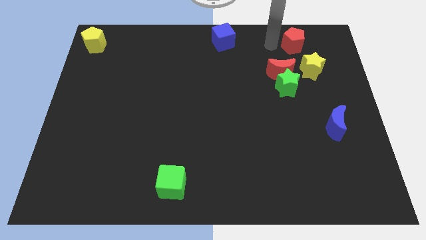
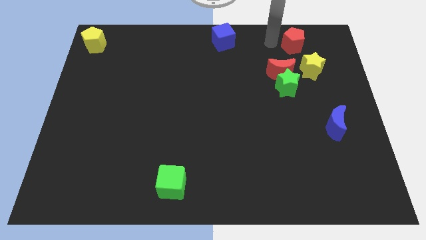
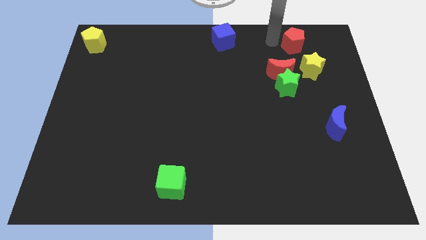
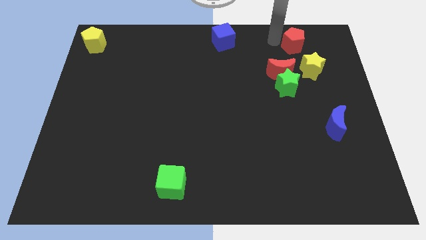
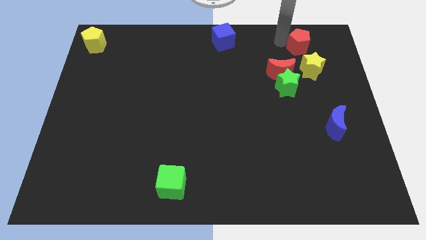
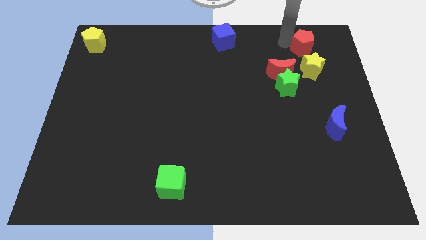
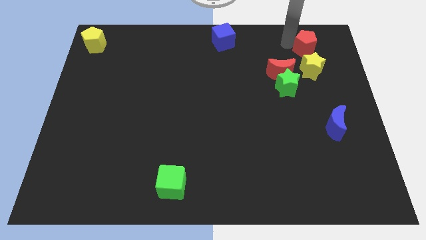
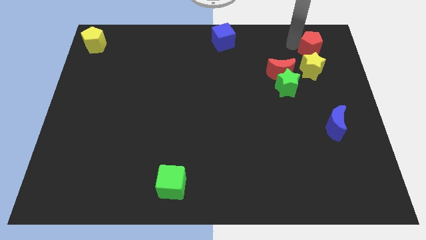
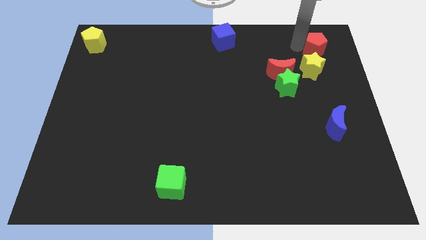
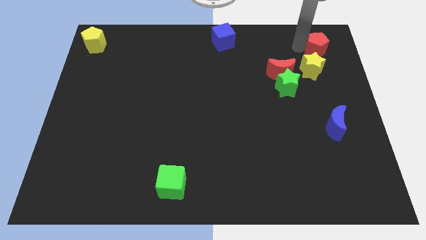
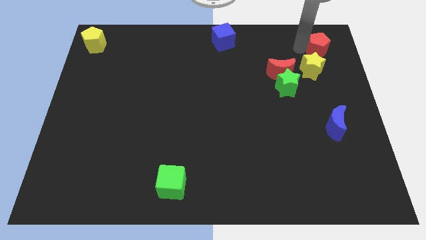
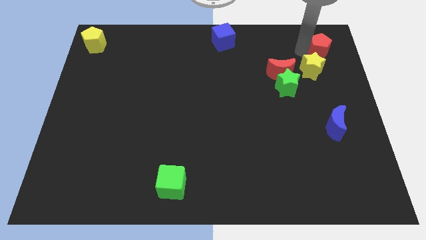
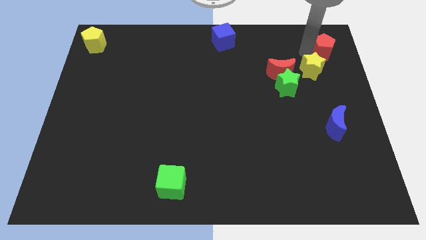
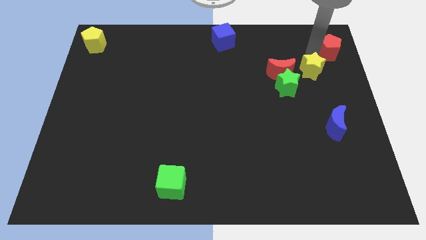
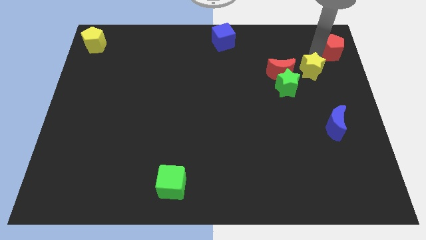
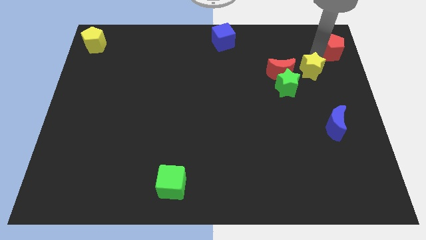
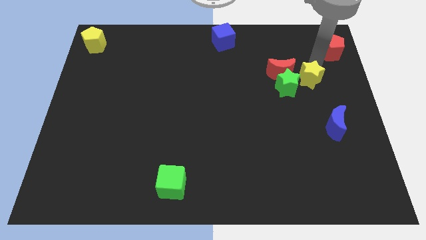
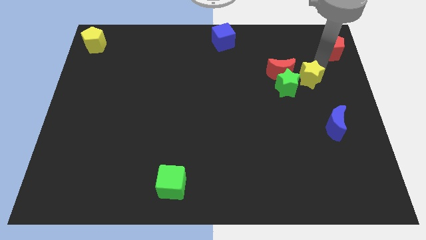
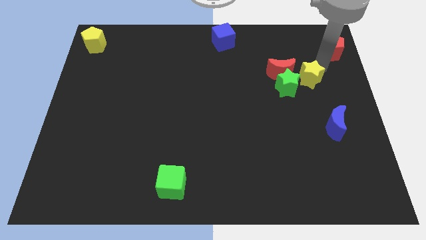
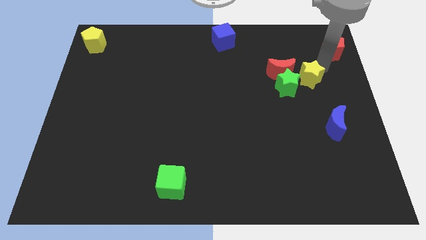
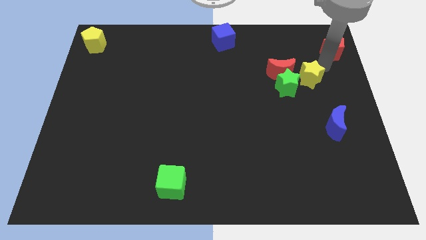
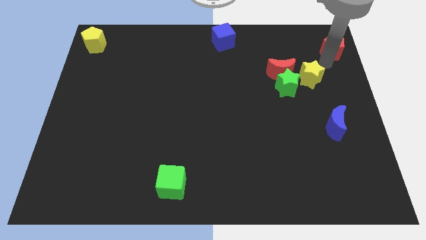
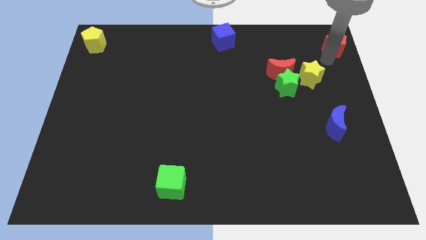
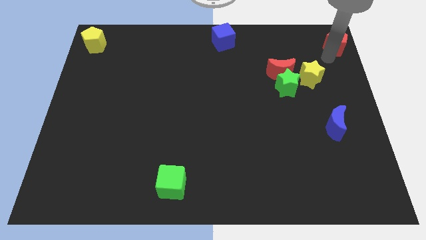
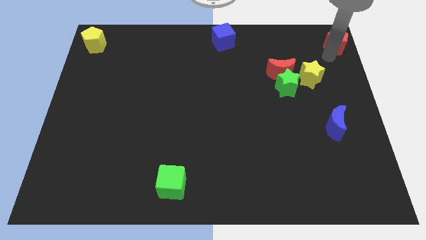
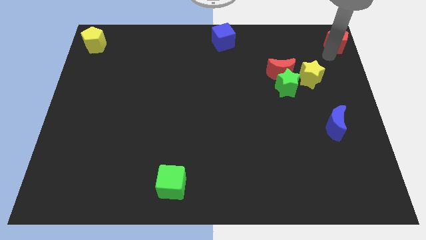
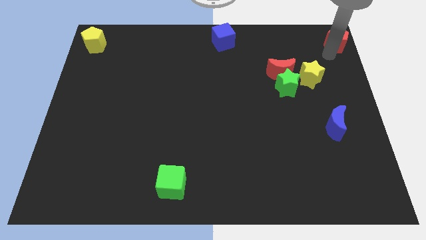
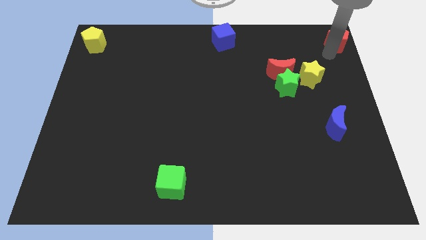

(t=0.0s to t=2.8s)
push the red pentagon to right top corner of the board

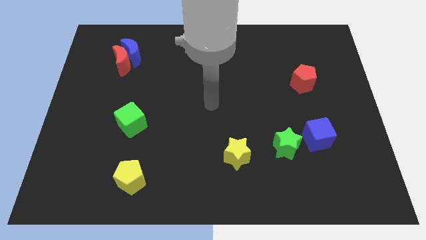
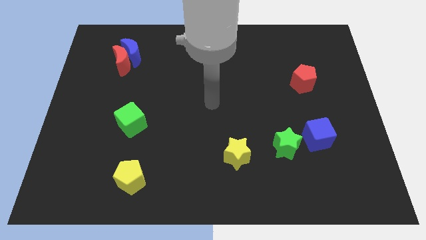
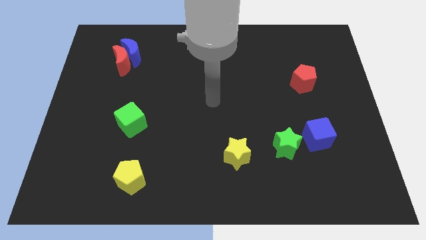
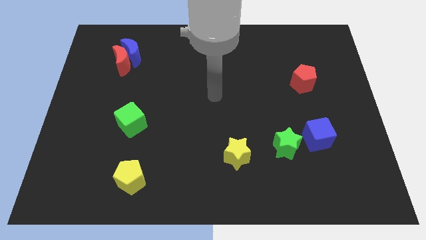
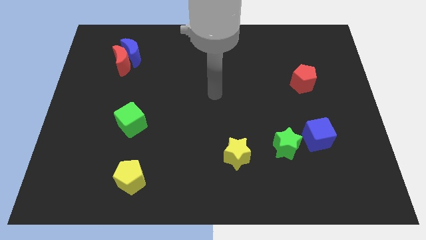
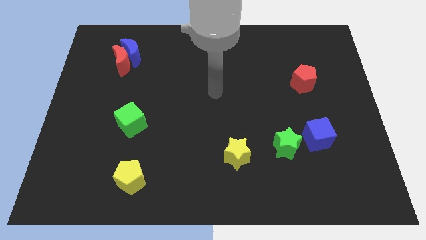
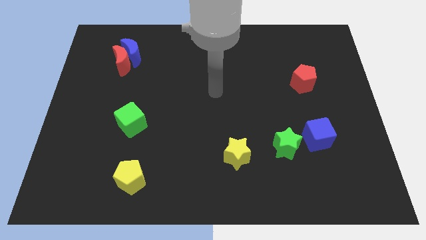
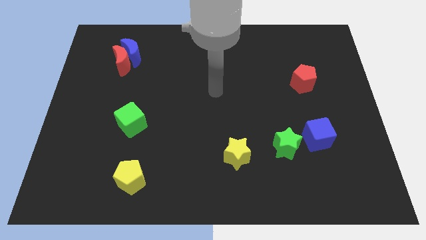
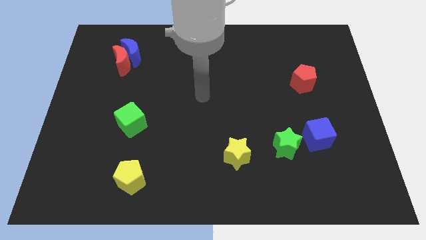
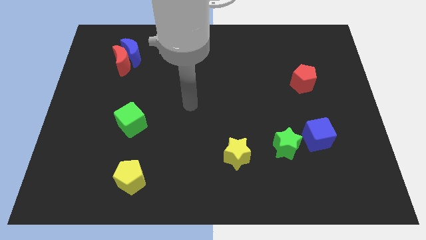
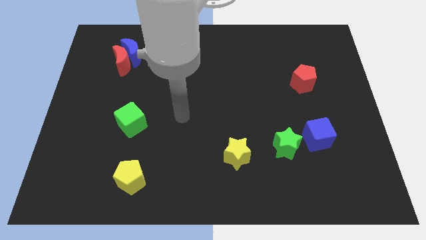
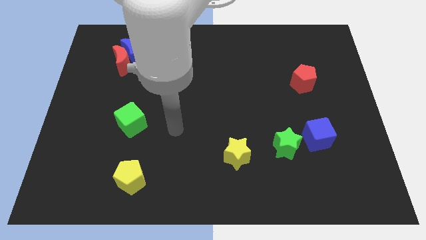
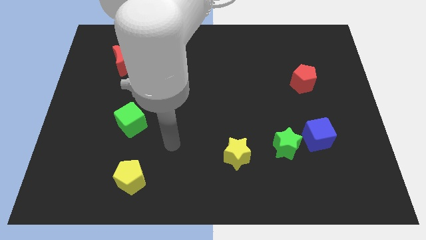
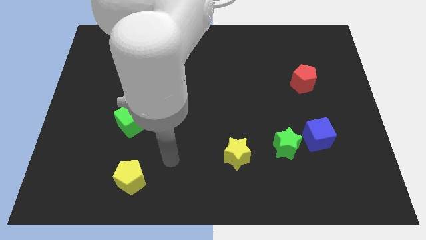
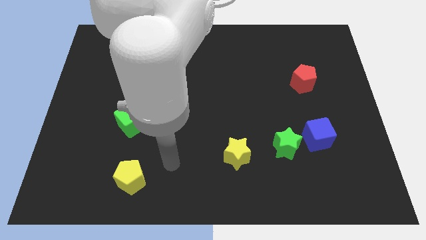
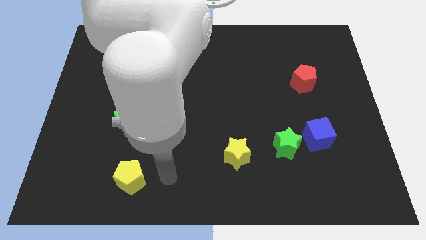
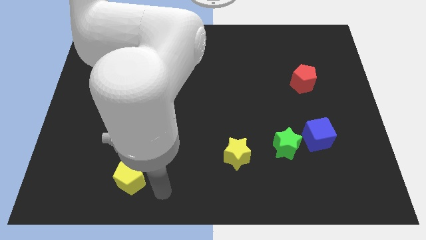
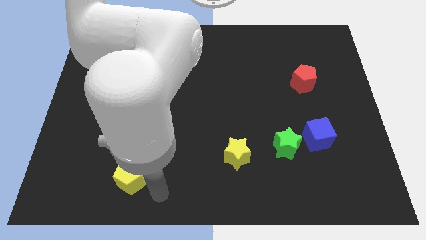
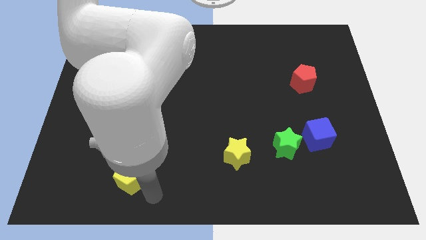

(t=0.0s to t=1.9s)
move your arm towards the yellow pentagon

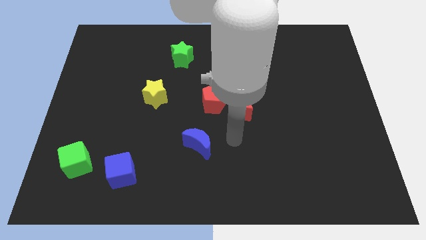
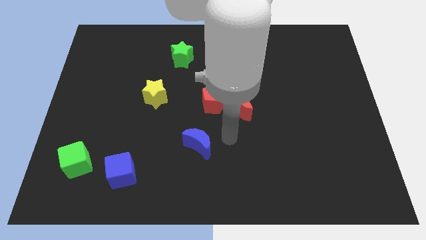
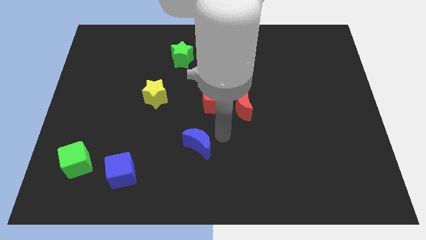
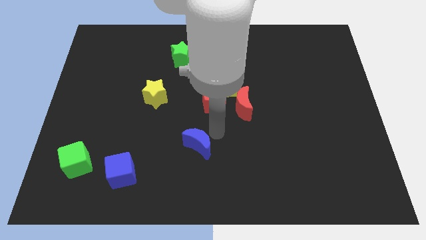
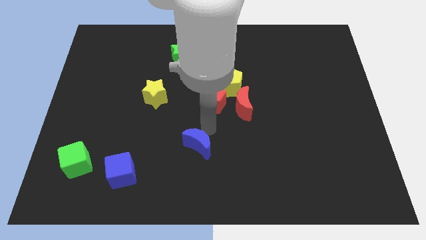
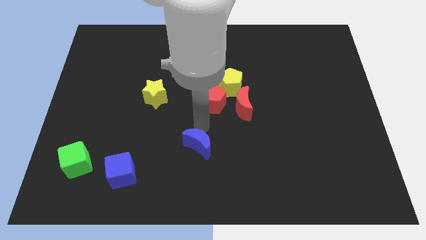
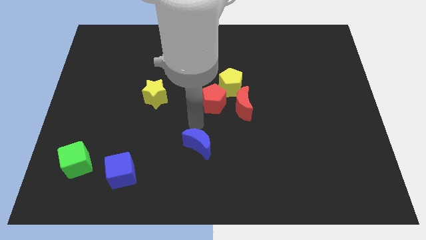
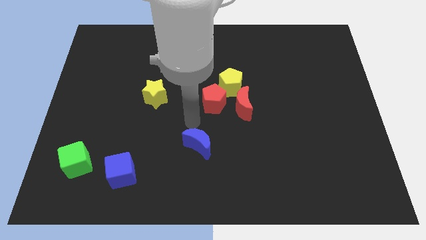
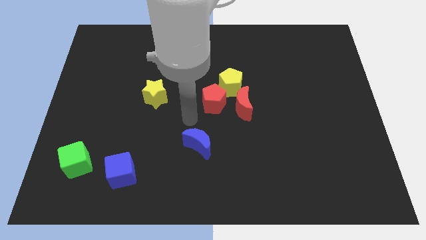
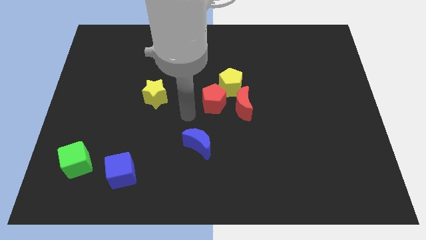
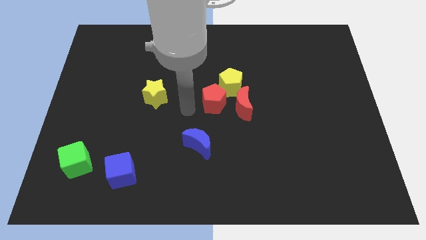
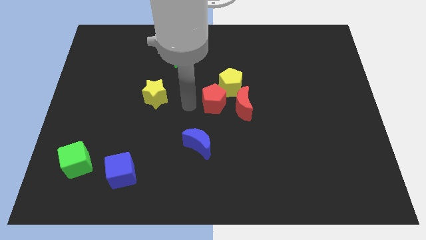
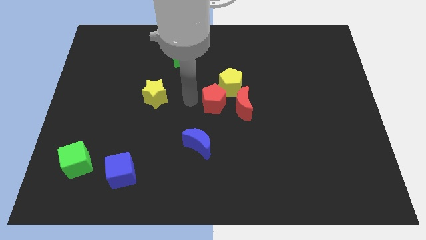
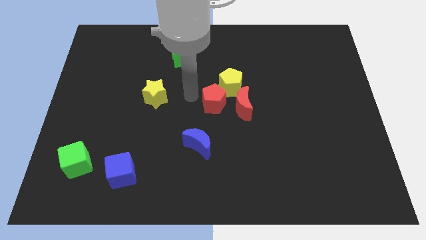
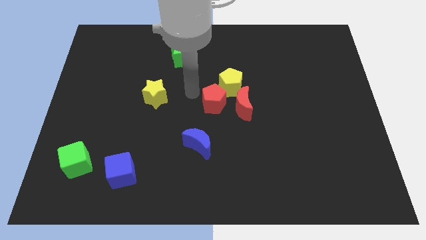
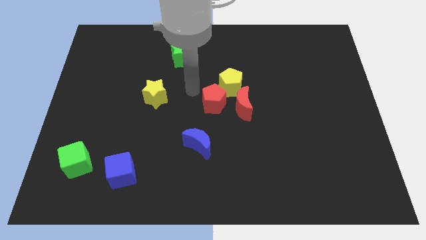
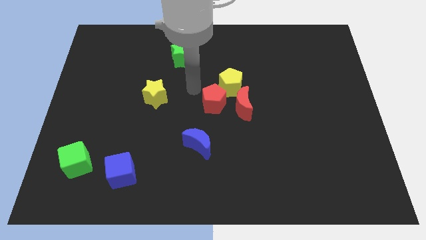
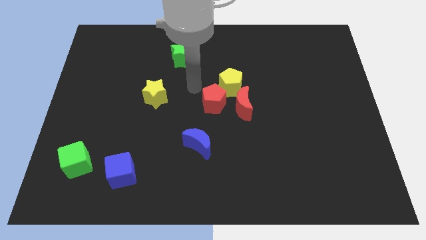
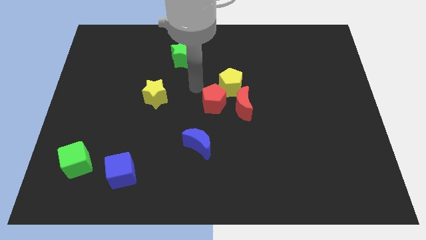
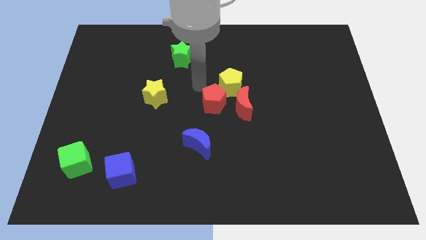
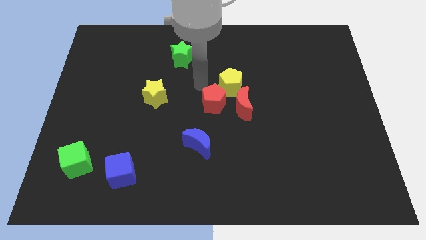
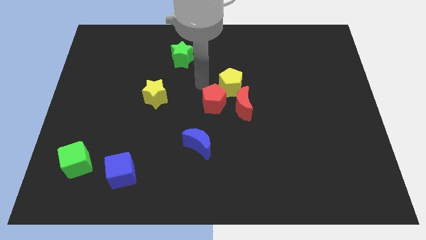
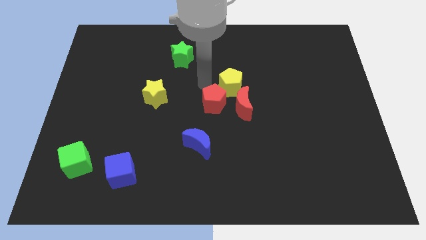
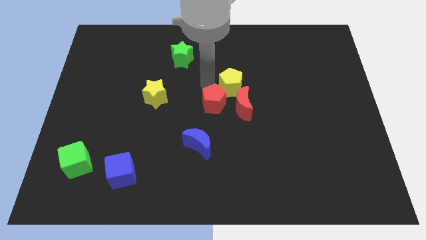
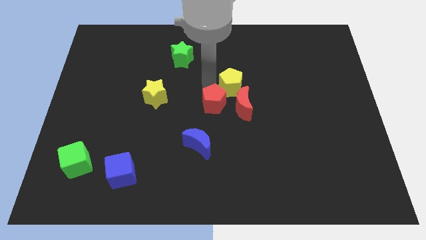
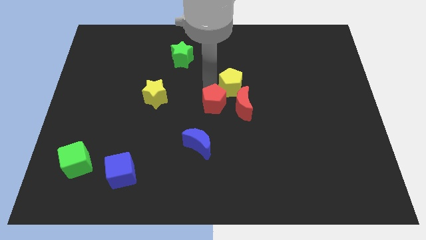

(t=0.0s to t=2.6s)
point your arm at the top of the red pentagon

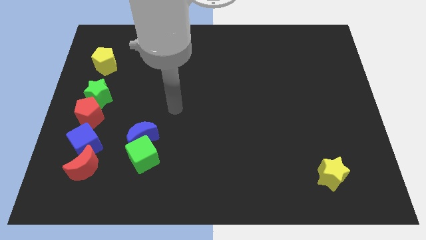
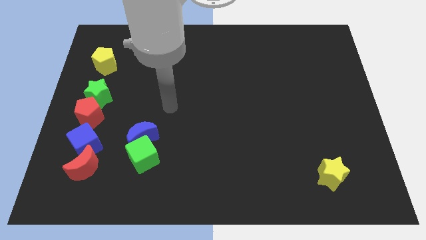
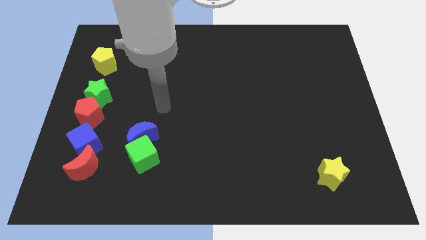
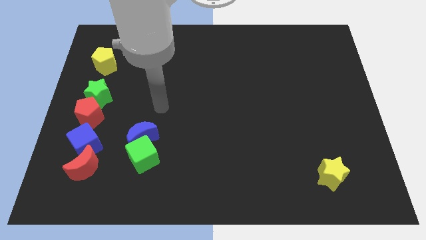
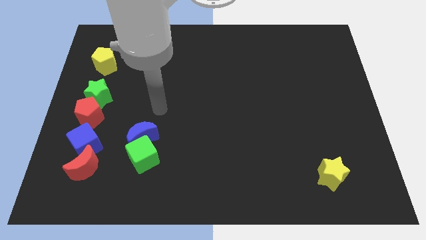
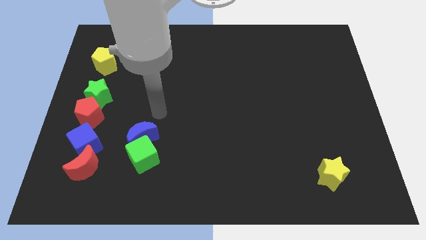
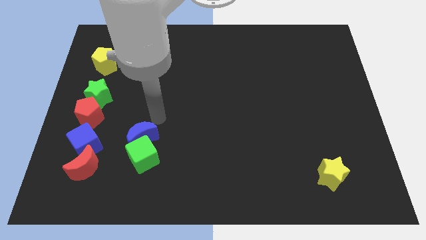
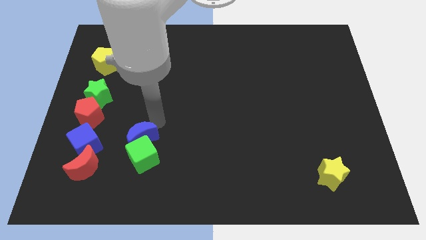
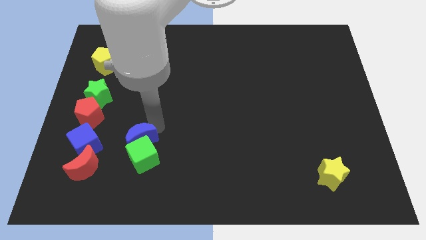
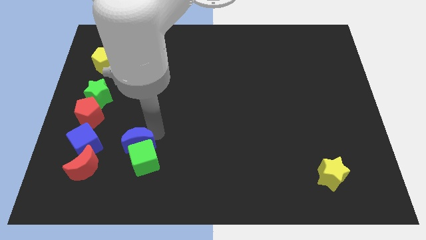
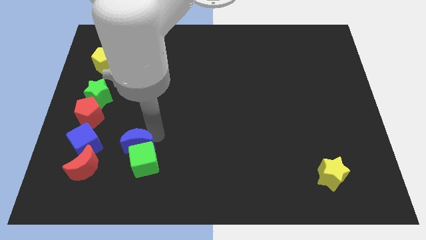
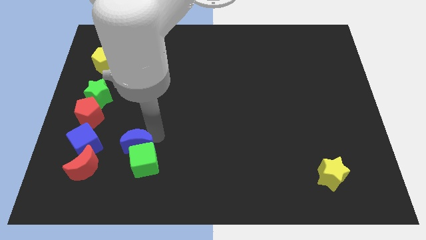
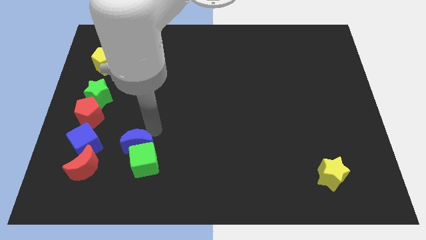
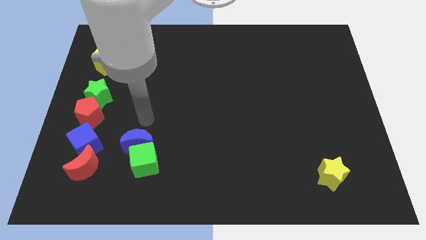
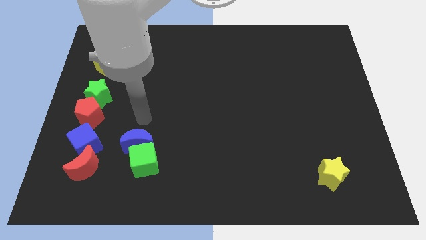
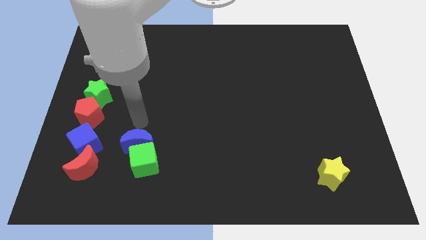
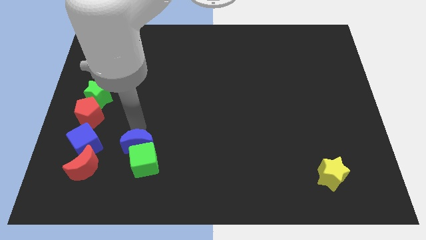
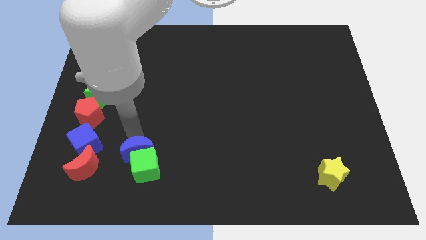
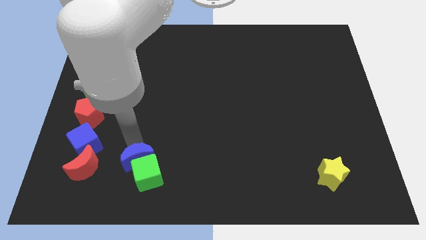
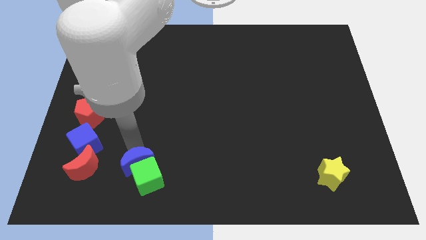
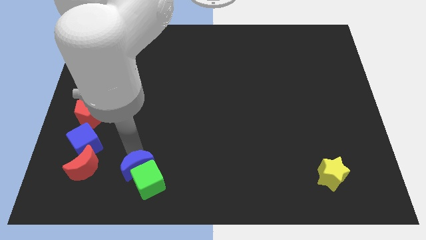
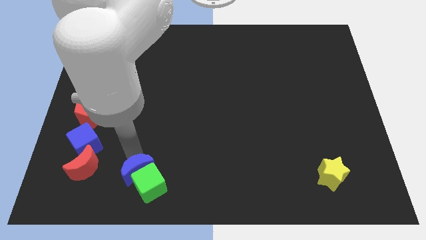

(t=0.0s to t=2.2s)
push the green cube downwards with blue moon
